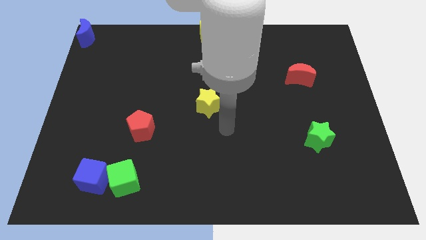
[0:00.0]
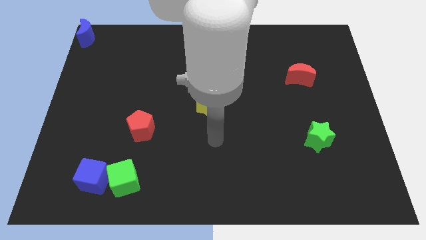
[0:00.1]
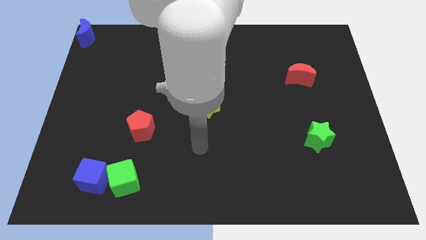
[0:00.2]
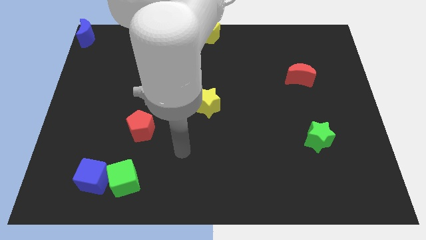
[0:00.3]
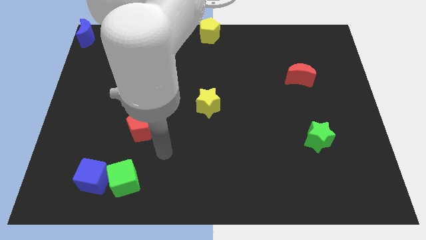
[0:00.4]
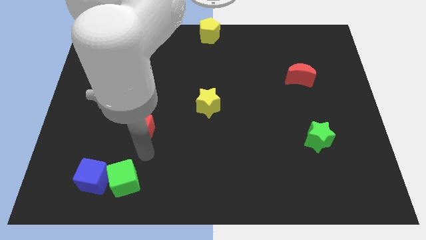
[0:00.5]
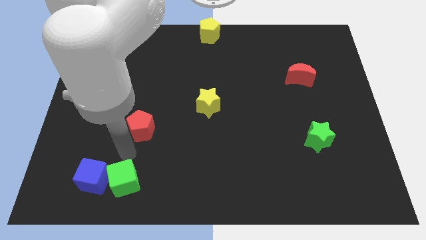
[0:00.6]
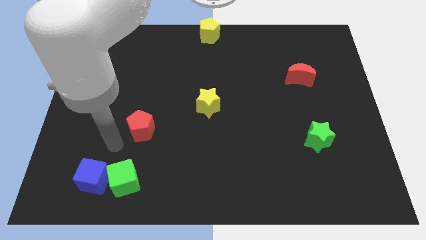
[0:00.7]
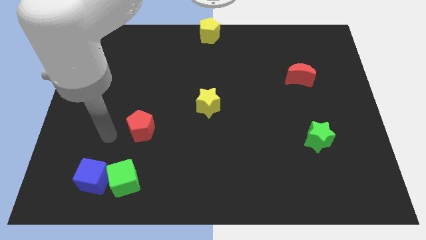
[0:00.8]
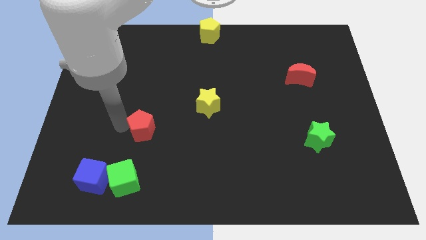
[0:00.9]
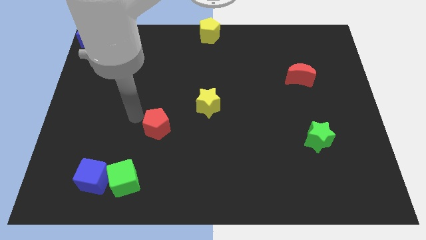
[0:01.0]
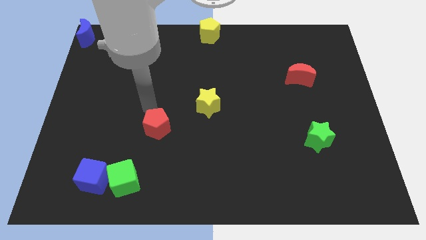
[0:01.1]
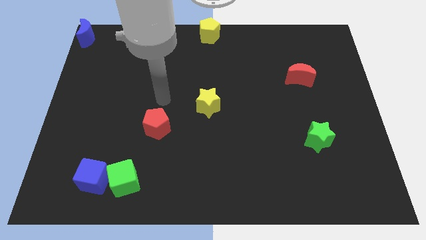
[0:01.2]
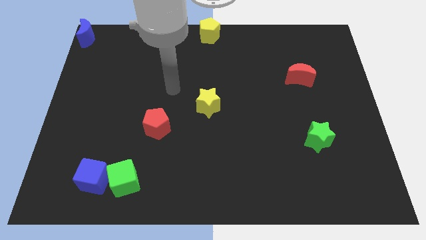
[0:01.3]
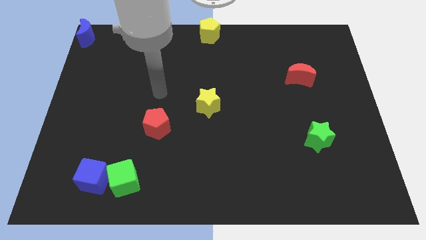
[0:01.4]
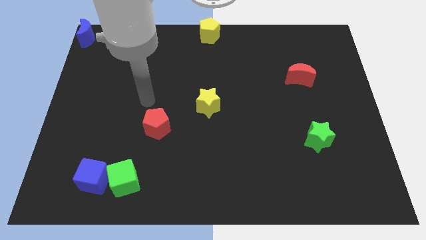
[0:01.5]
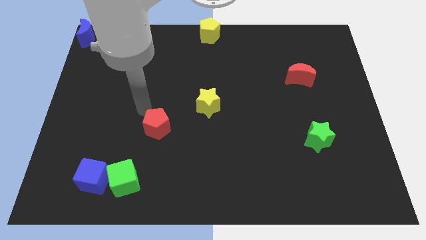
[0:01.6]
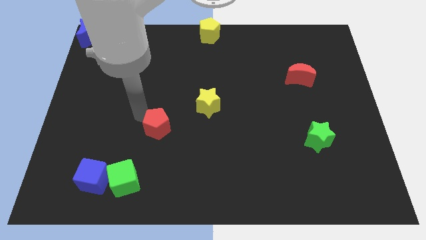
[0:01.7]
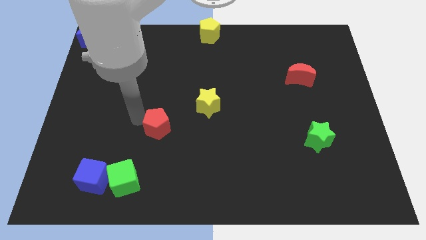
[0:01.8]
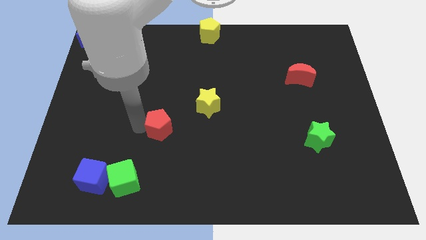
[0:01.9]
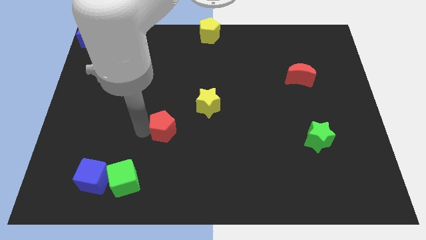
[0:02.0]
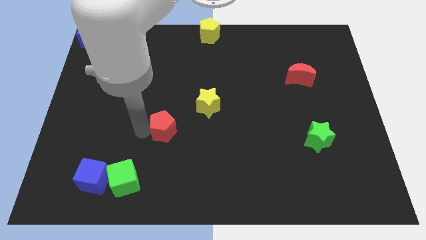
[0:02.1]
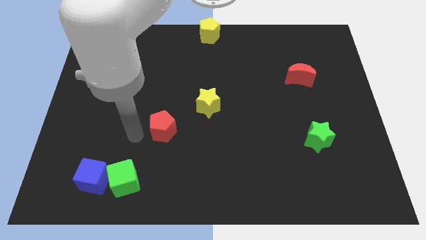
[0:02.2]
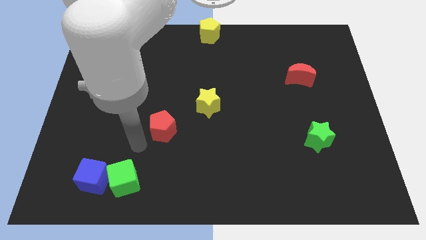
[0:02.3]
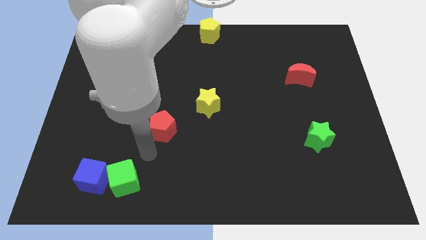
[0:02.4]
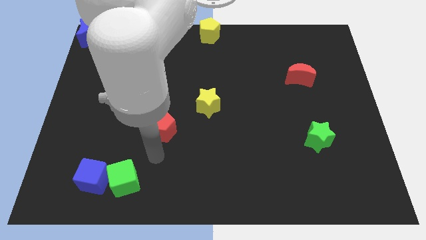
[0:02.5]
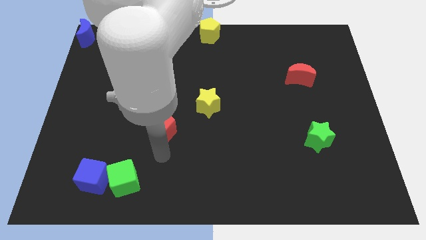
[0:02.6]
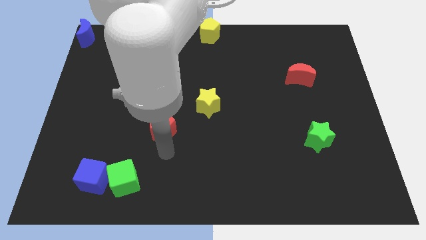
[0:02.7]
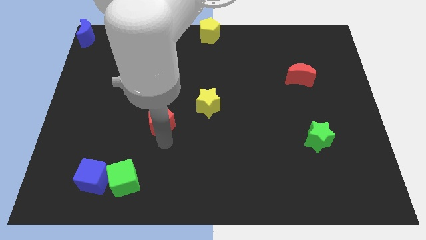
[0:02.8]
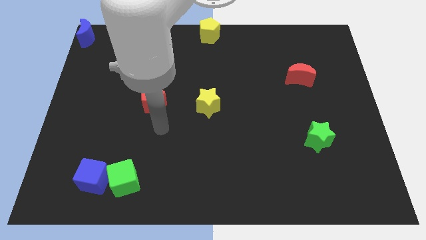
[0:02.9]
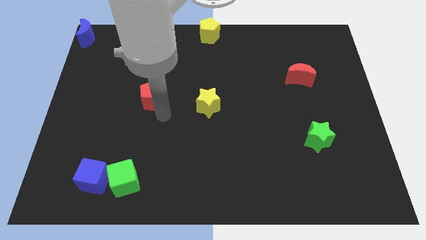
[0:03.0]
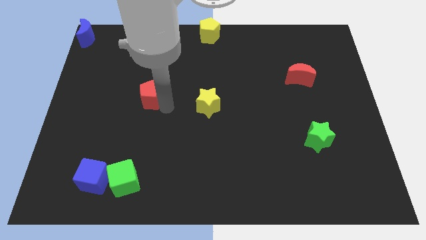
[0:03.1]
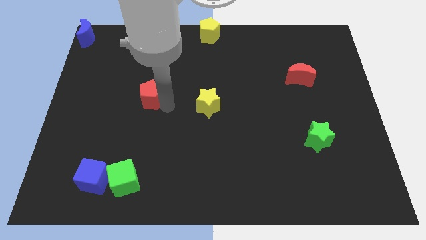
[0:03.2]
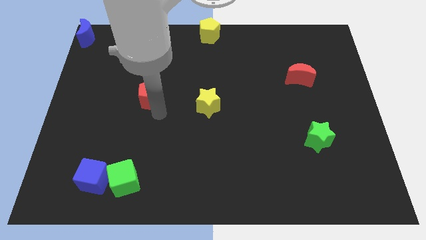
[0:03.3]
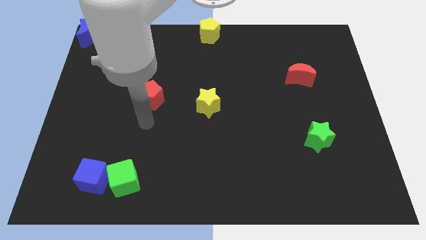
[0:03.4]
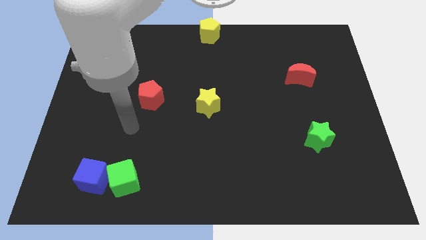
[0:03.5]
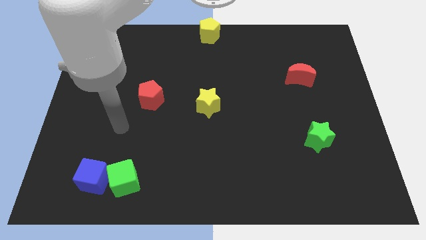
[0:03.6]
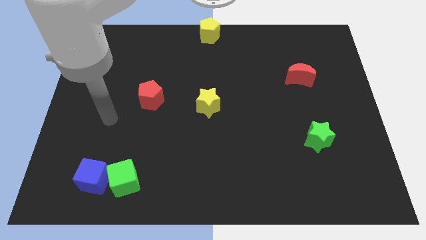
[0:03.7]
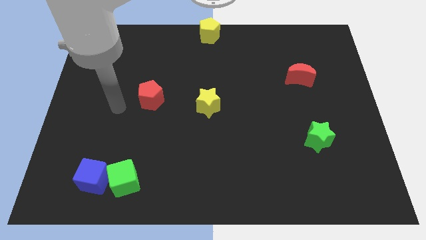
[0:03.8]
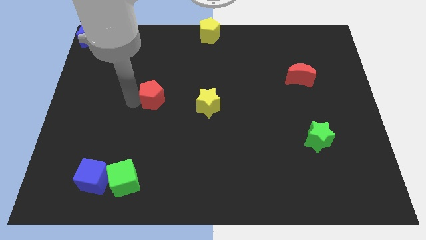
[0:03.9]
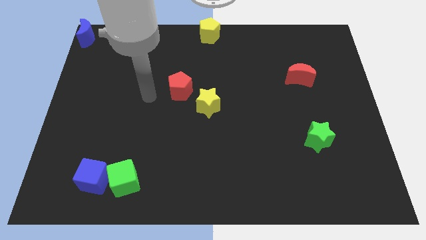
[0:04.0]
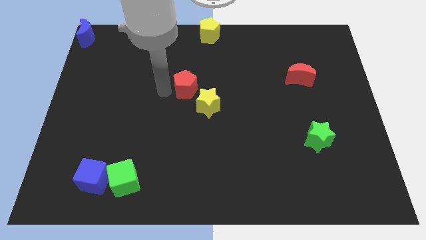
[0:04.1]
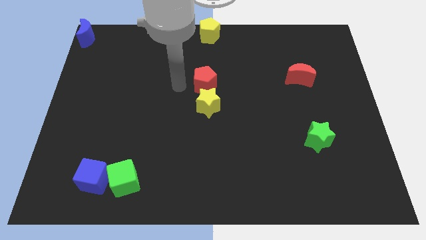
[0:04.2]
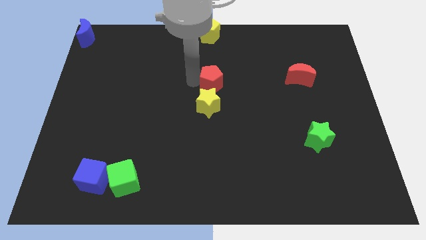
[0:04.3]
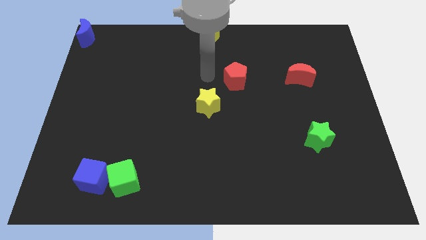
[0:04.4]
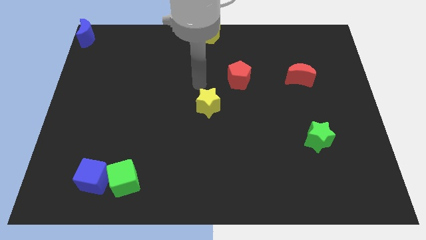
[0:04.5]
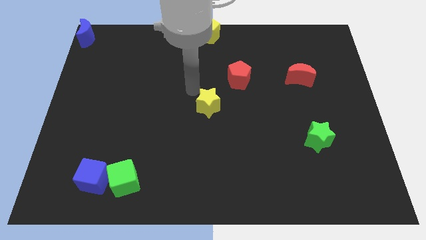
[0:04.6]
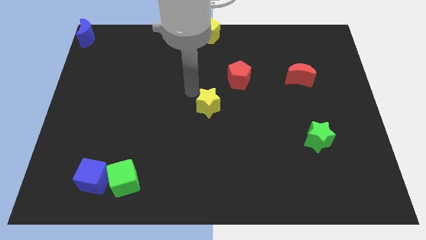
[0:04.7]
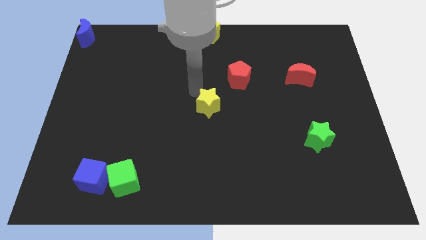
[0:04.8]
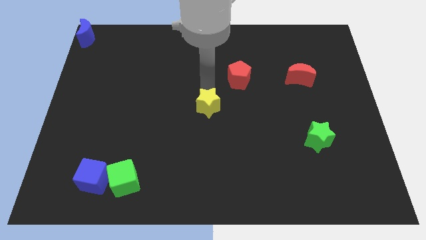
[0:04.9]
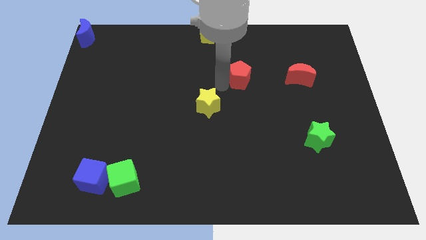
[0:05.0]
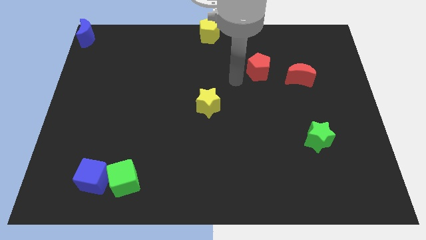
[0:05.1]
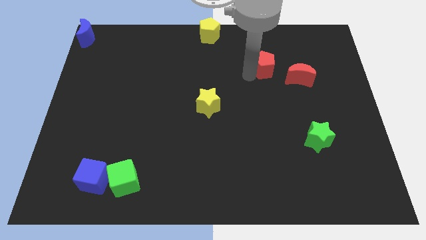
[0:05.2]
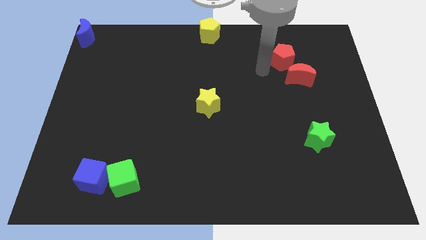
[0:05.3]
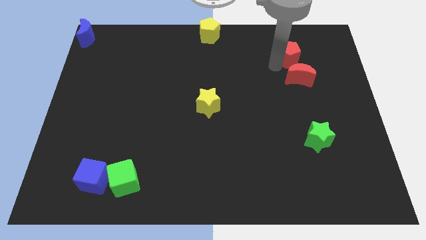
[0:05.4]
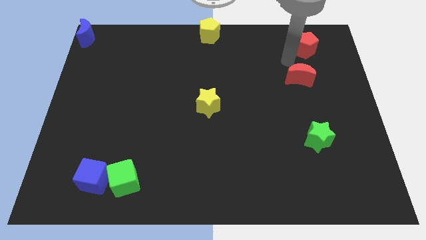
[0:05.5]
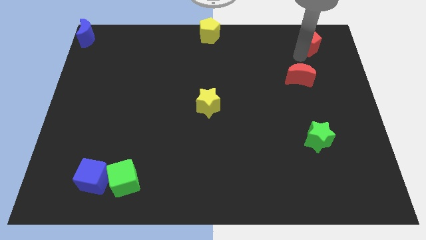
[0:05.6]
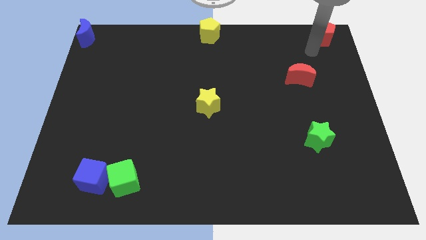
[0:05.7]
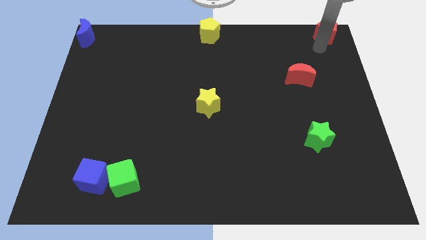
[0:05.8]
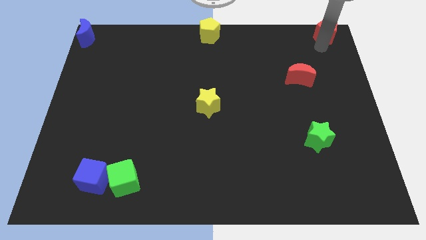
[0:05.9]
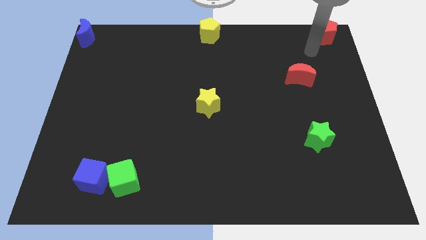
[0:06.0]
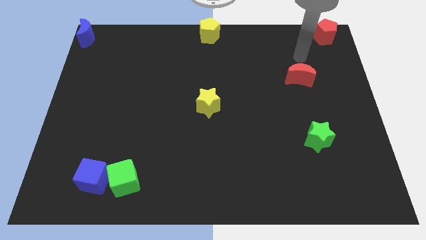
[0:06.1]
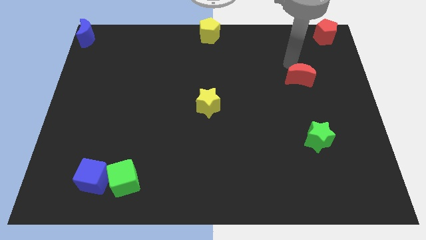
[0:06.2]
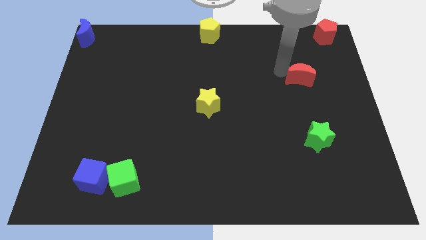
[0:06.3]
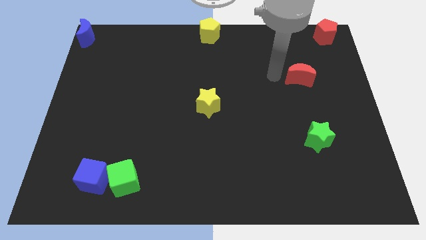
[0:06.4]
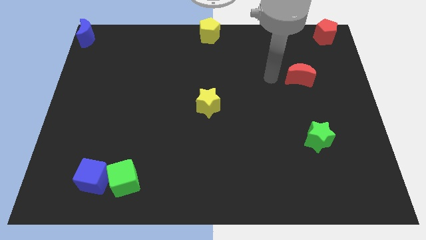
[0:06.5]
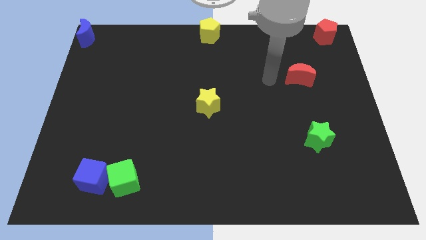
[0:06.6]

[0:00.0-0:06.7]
slide the red pentagon to the top right corner of the board

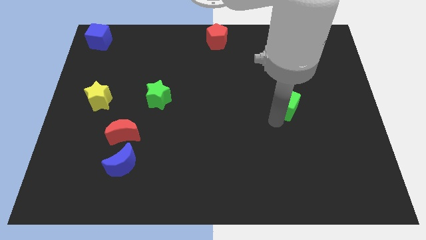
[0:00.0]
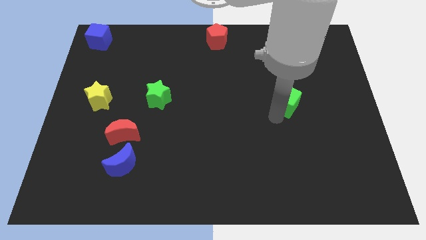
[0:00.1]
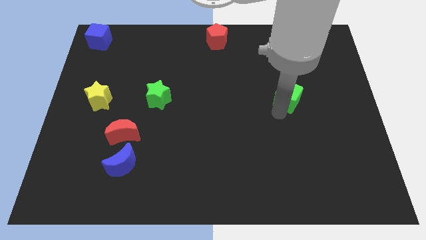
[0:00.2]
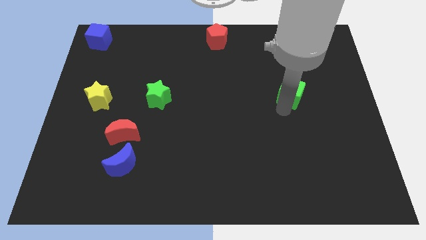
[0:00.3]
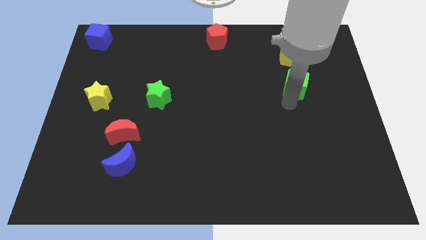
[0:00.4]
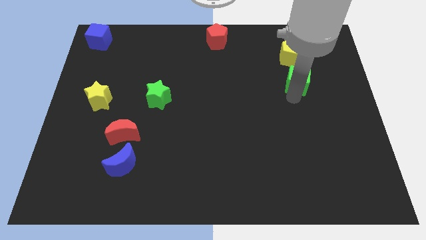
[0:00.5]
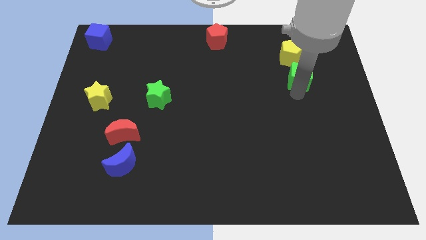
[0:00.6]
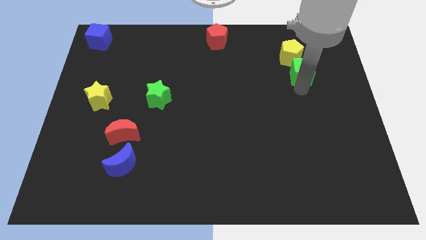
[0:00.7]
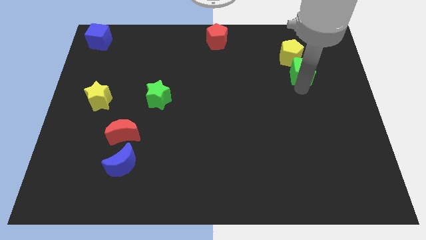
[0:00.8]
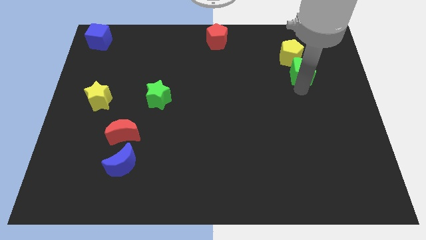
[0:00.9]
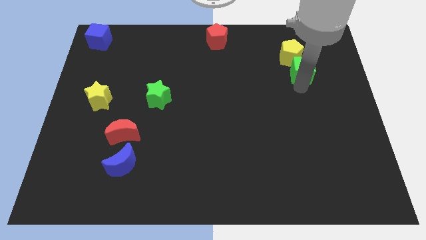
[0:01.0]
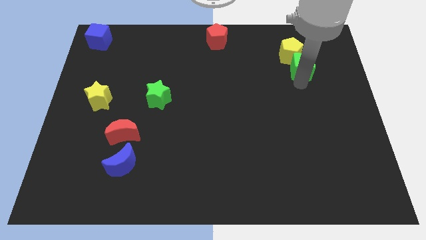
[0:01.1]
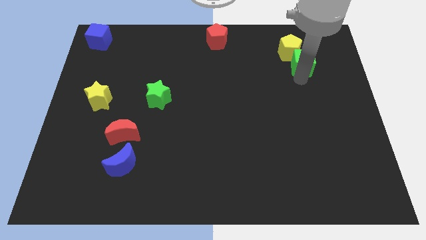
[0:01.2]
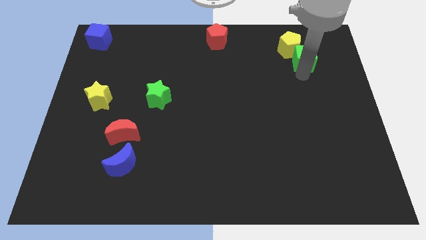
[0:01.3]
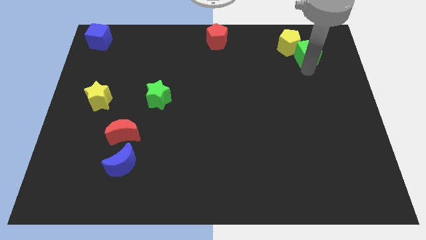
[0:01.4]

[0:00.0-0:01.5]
move the green cube into the yellow pentagon

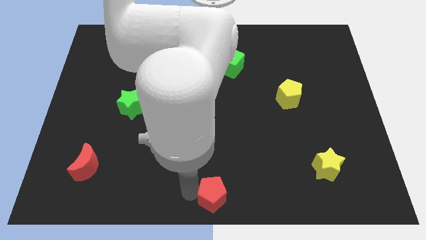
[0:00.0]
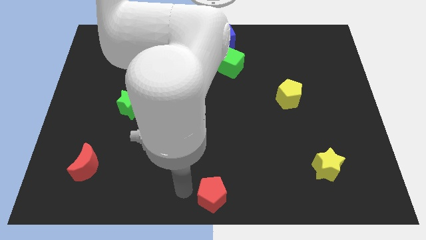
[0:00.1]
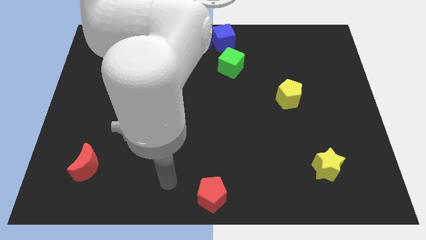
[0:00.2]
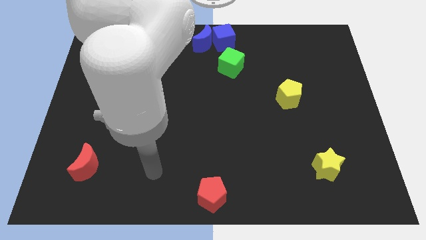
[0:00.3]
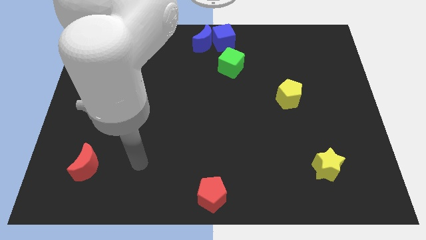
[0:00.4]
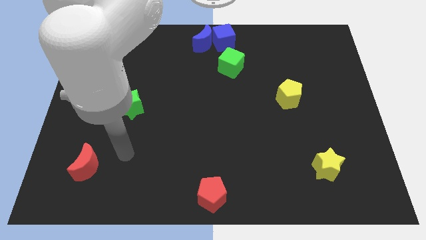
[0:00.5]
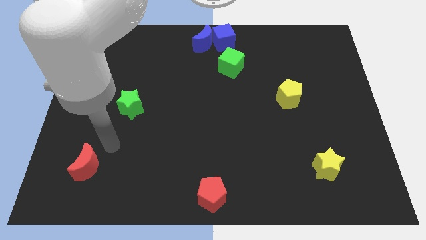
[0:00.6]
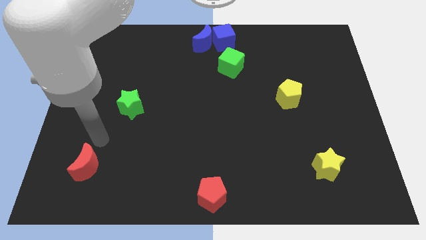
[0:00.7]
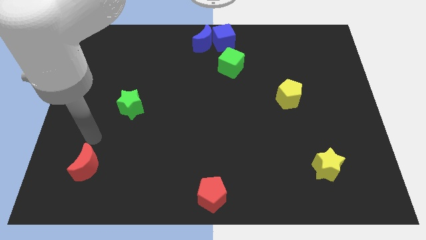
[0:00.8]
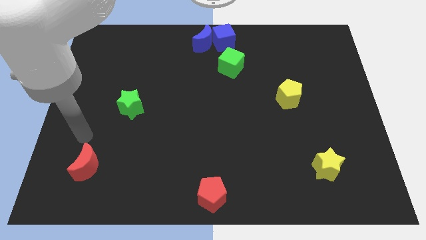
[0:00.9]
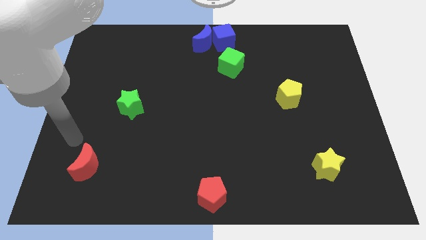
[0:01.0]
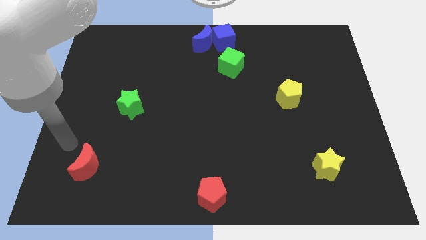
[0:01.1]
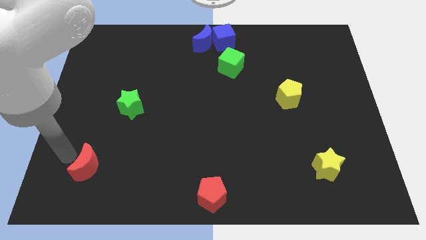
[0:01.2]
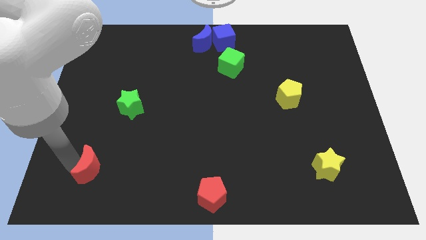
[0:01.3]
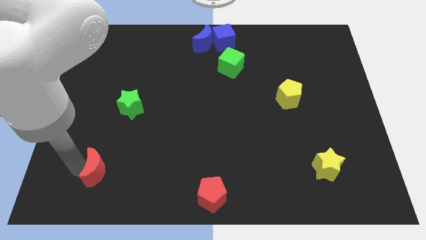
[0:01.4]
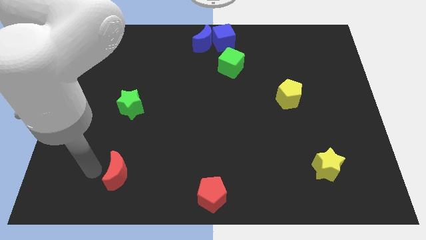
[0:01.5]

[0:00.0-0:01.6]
move your arm away from the red pentagon
